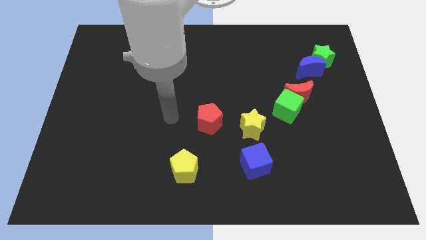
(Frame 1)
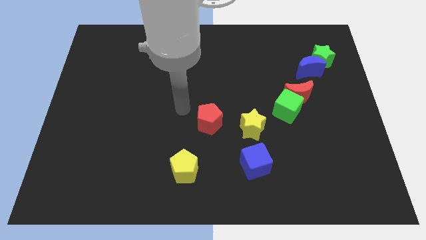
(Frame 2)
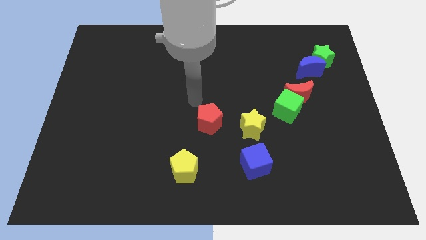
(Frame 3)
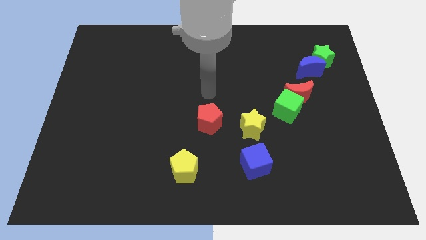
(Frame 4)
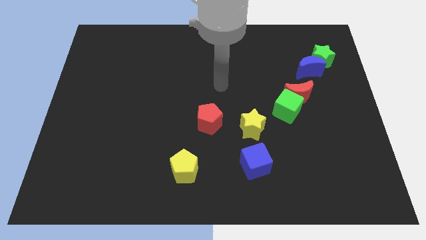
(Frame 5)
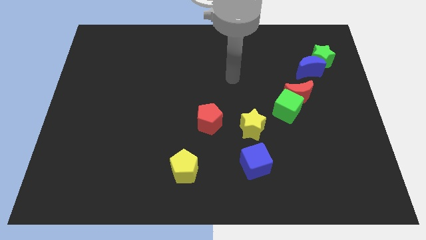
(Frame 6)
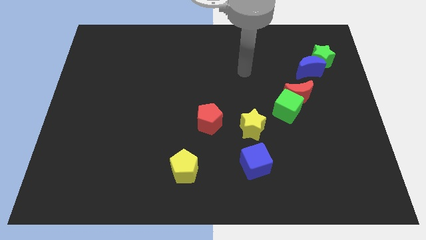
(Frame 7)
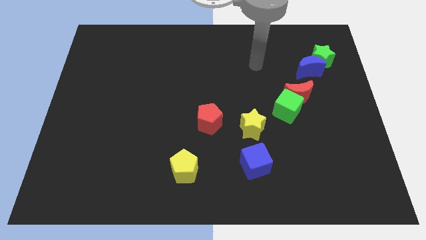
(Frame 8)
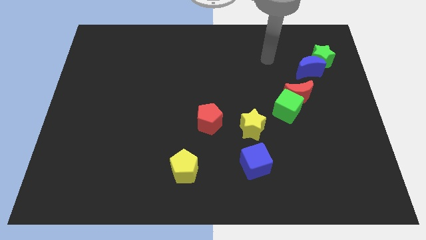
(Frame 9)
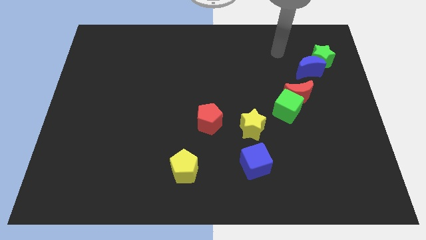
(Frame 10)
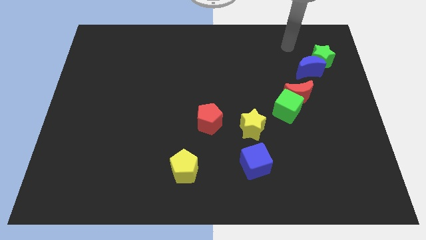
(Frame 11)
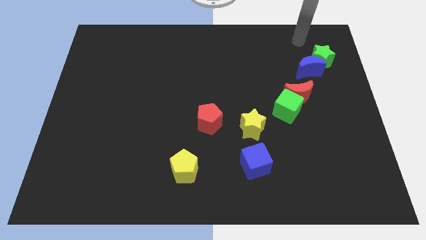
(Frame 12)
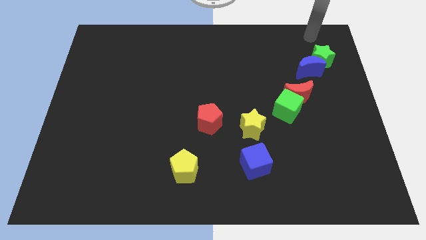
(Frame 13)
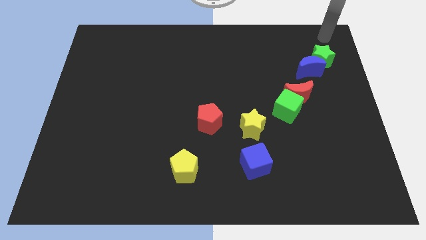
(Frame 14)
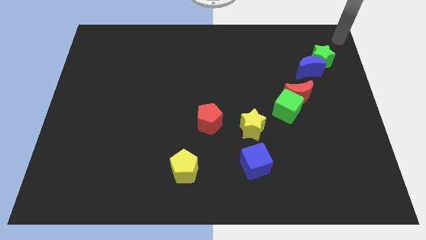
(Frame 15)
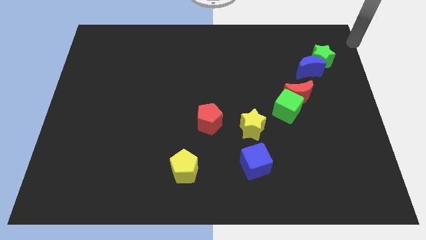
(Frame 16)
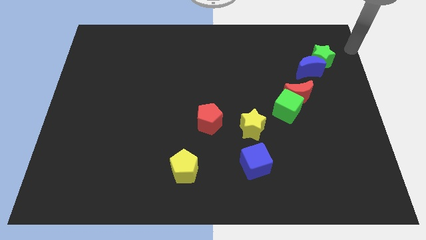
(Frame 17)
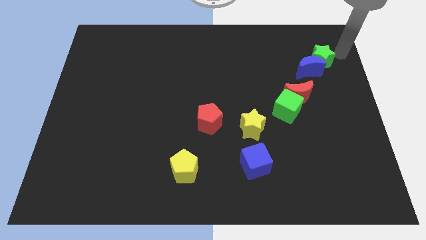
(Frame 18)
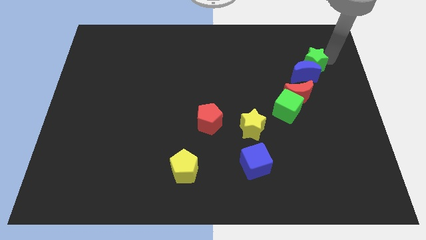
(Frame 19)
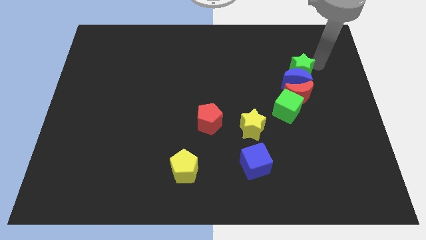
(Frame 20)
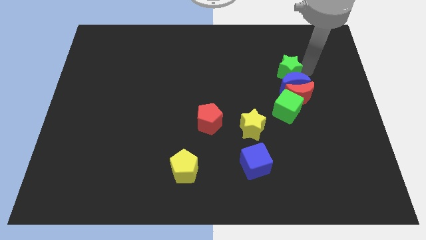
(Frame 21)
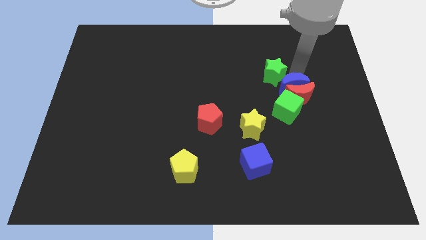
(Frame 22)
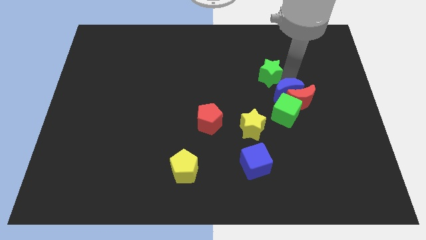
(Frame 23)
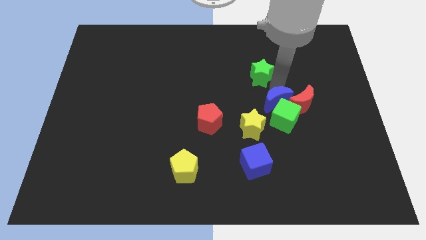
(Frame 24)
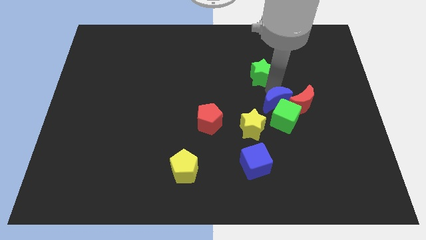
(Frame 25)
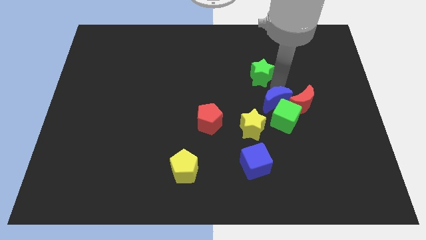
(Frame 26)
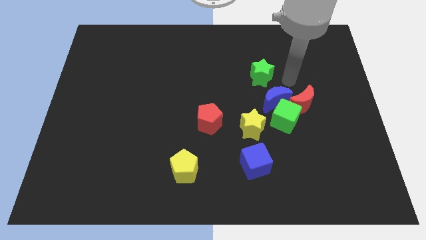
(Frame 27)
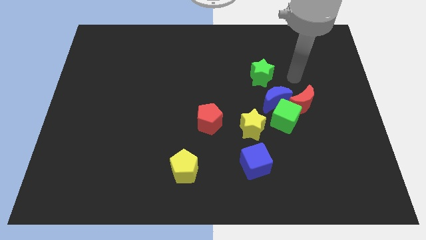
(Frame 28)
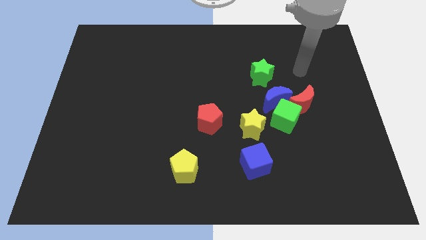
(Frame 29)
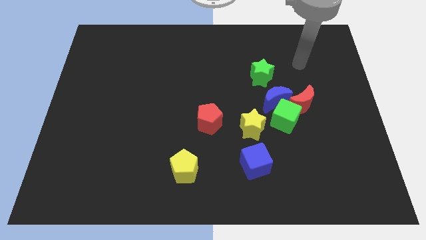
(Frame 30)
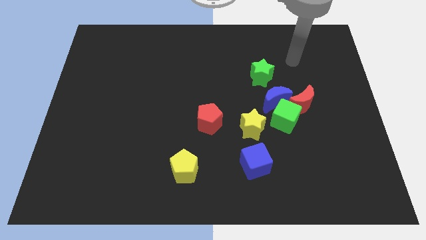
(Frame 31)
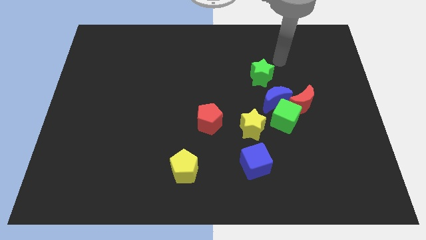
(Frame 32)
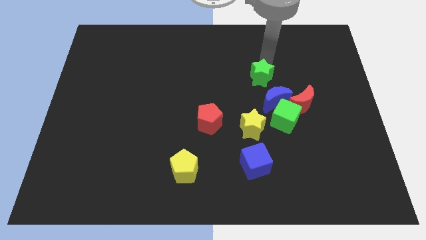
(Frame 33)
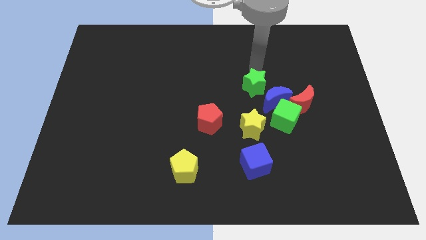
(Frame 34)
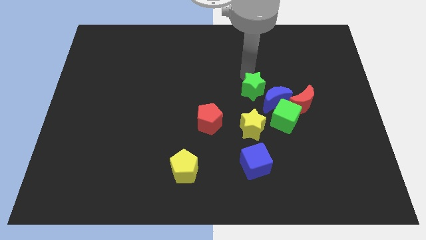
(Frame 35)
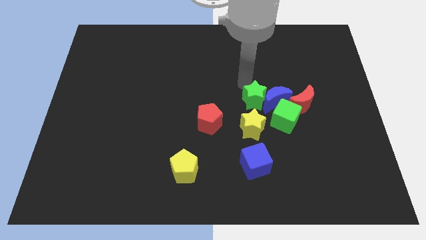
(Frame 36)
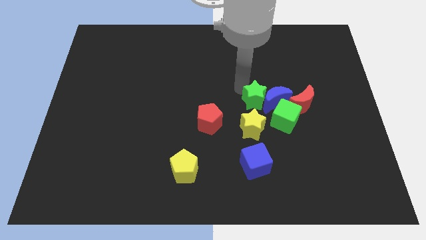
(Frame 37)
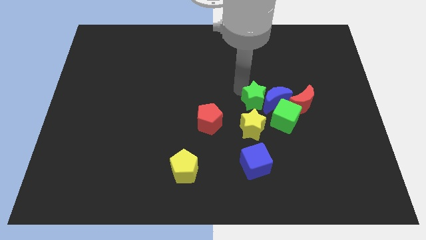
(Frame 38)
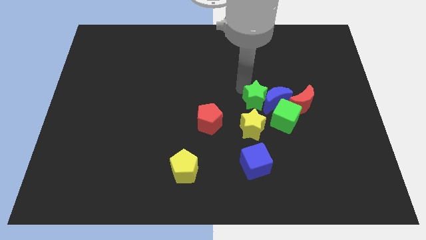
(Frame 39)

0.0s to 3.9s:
move the green star towards center

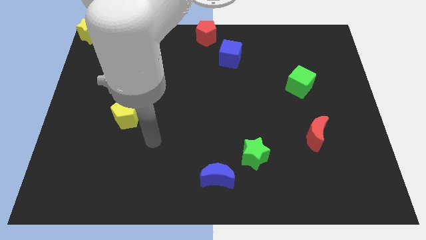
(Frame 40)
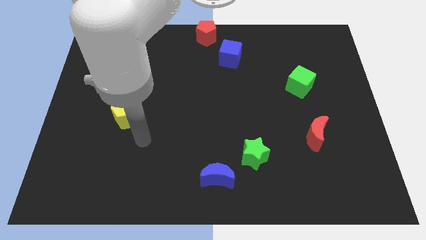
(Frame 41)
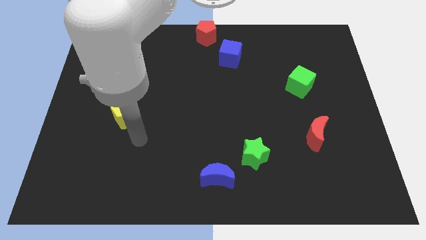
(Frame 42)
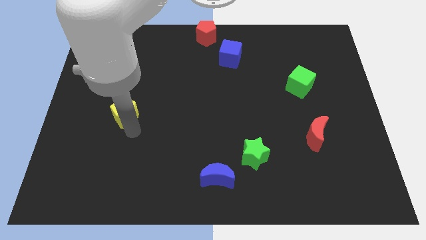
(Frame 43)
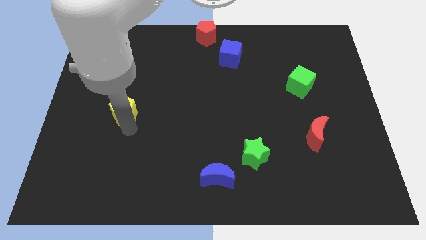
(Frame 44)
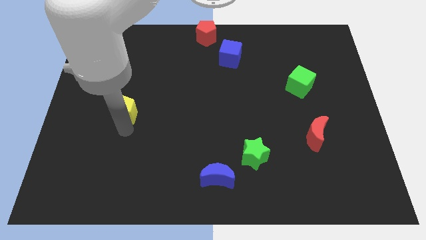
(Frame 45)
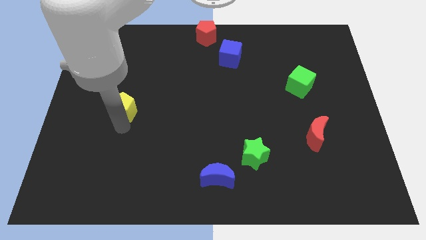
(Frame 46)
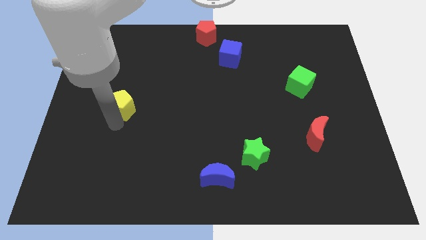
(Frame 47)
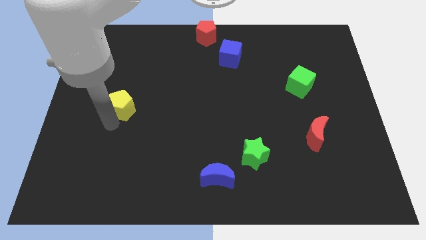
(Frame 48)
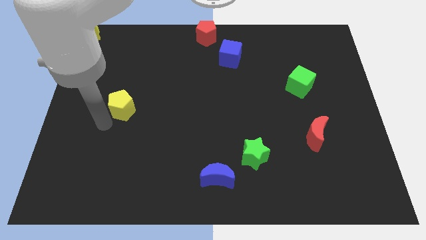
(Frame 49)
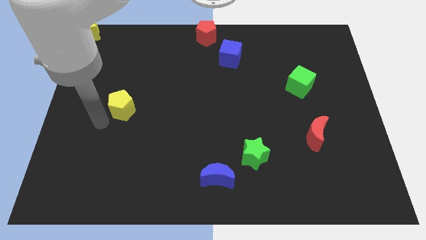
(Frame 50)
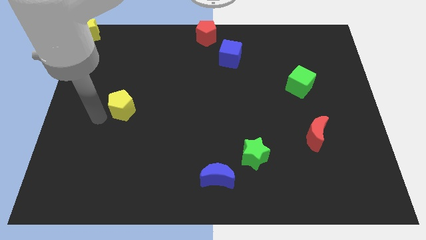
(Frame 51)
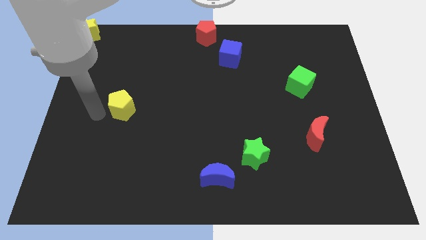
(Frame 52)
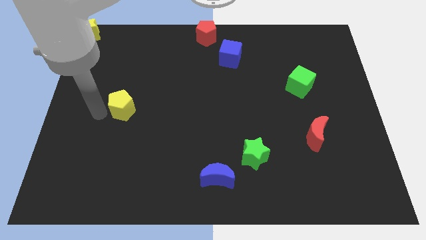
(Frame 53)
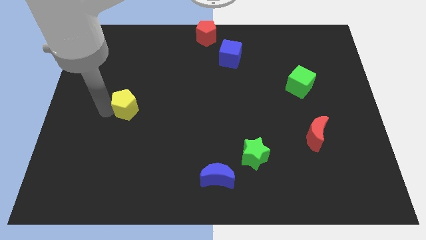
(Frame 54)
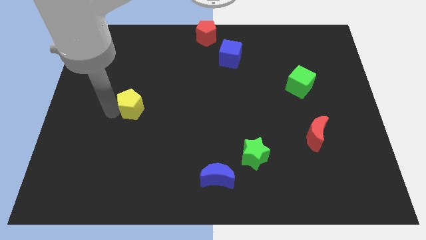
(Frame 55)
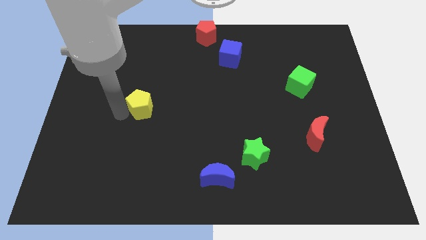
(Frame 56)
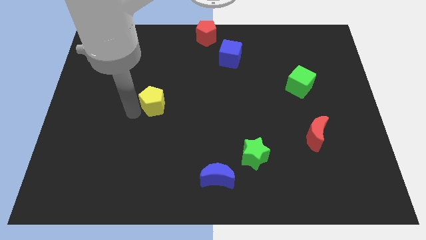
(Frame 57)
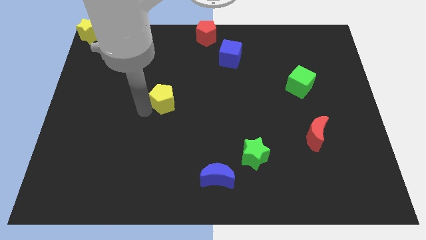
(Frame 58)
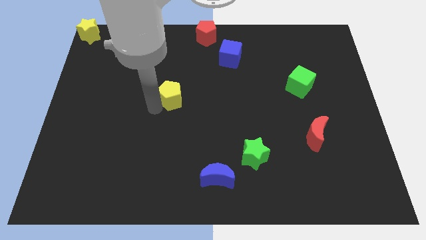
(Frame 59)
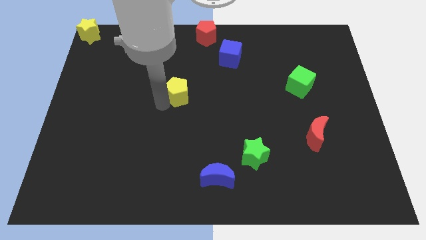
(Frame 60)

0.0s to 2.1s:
push the yellow pentagon towards the right side of the board

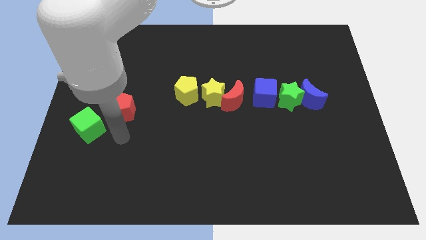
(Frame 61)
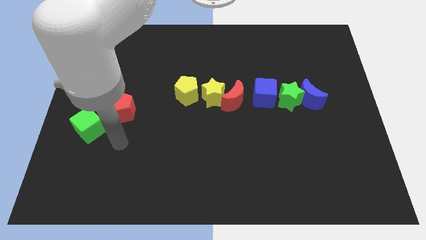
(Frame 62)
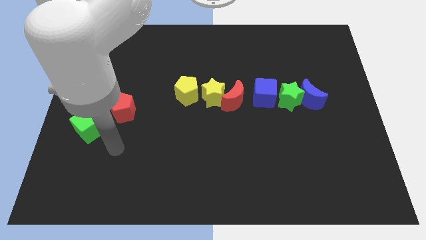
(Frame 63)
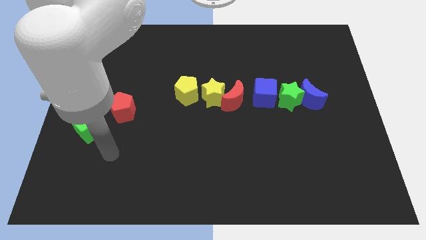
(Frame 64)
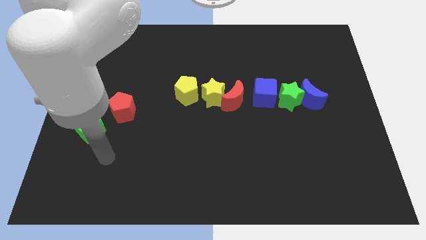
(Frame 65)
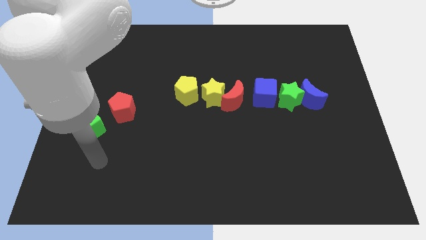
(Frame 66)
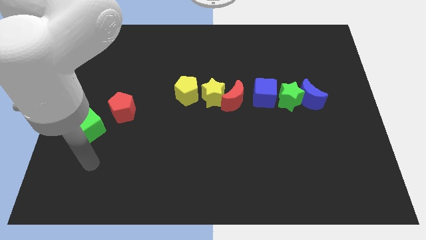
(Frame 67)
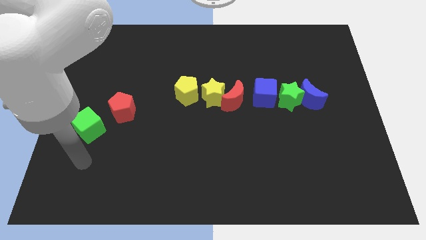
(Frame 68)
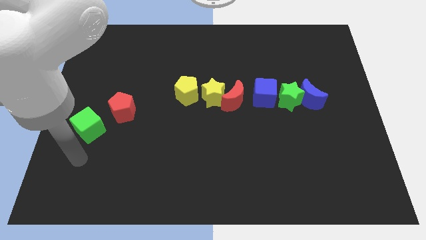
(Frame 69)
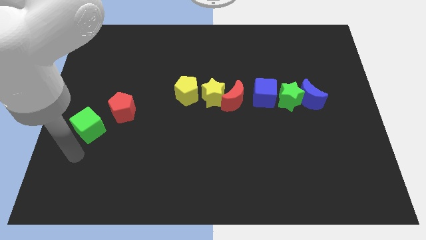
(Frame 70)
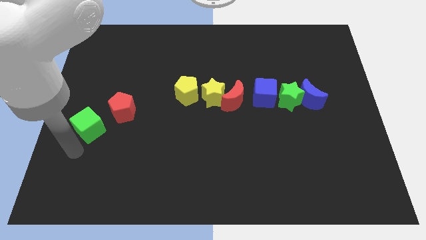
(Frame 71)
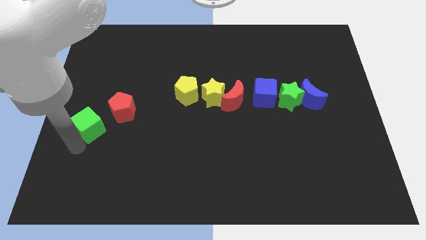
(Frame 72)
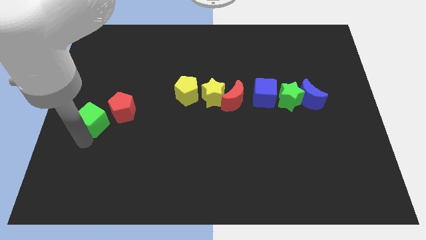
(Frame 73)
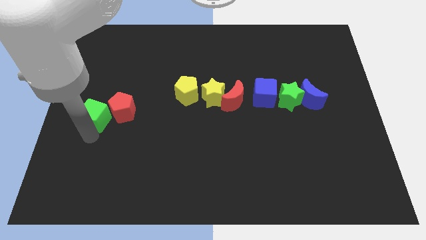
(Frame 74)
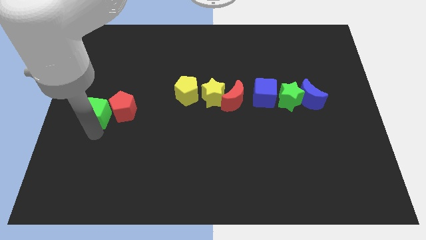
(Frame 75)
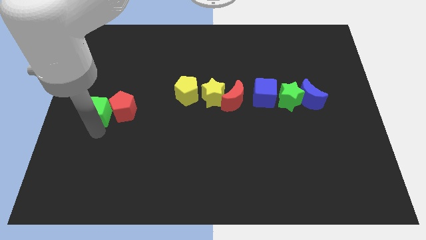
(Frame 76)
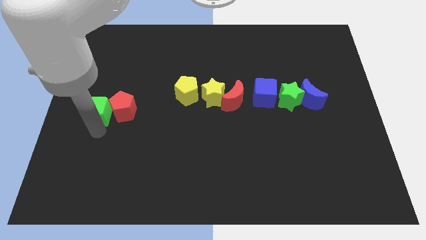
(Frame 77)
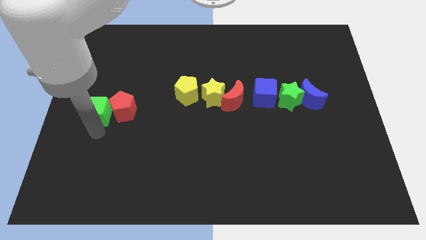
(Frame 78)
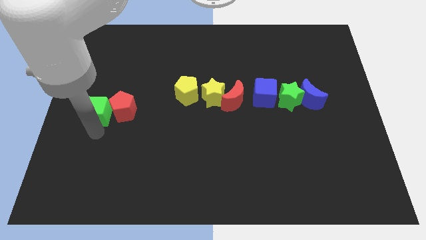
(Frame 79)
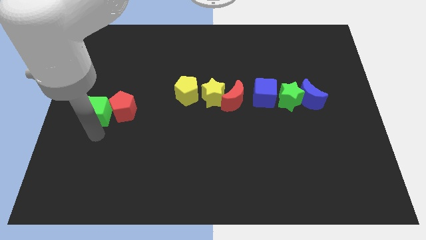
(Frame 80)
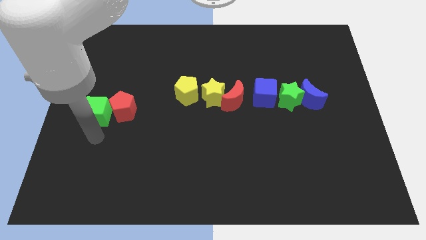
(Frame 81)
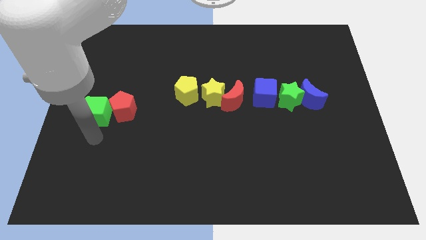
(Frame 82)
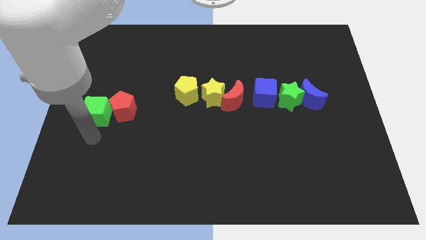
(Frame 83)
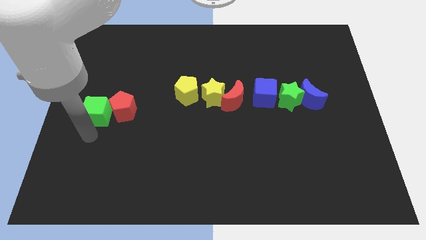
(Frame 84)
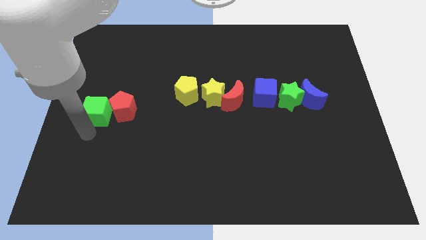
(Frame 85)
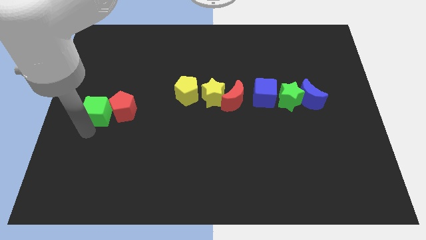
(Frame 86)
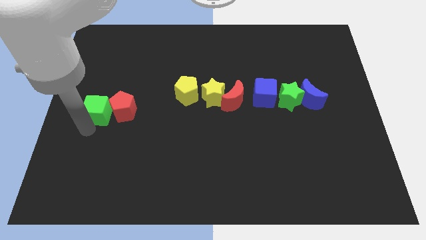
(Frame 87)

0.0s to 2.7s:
push the green cube into the red pentagon
